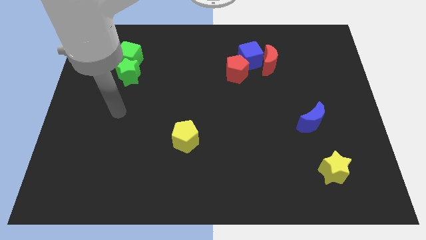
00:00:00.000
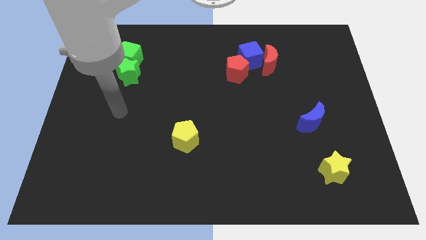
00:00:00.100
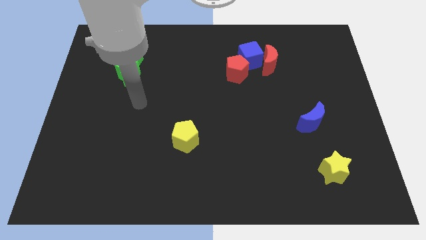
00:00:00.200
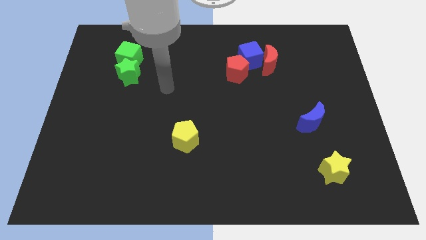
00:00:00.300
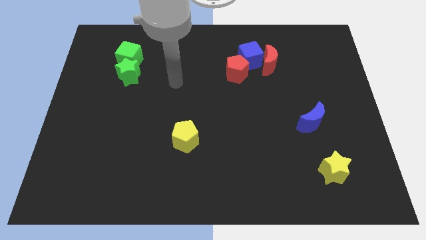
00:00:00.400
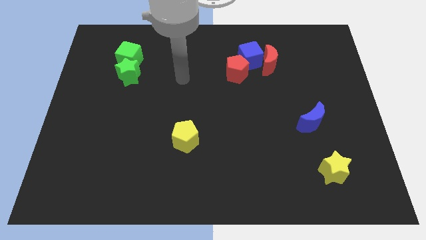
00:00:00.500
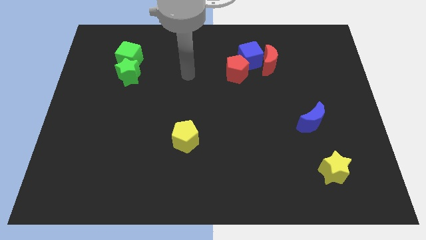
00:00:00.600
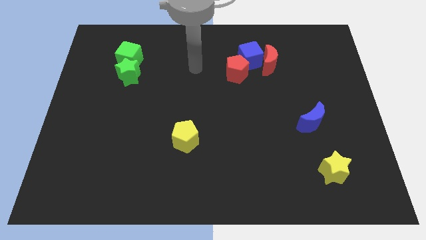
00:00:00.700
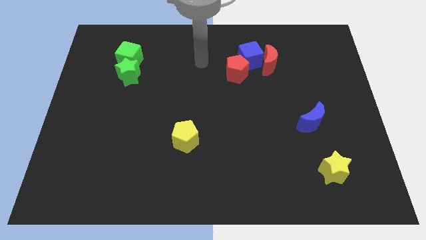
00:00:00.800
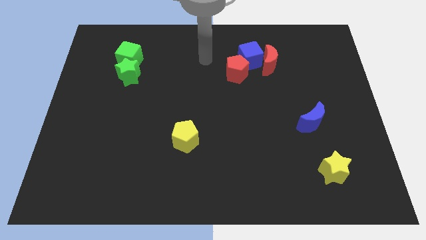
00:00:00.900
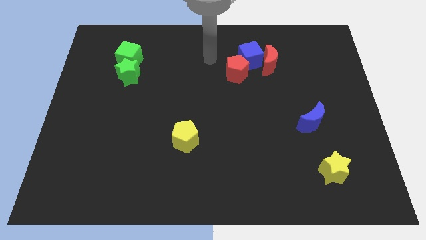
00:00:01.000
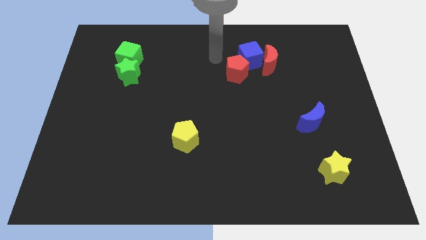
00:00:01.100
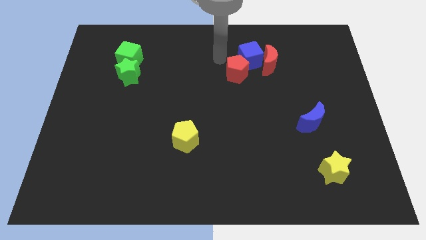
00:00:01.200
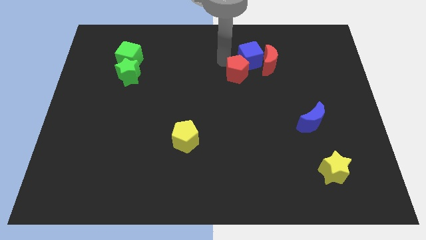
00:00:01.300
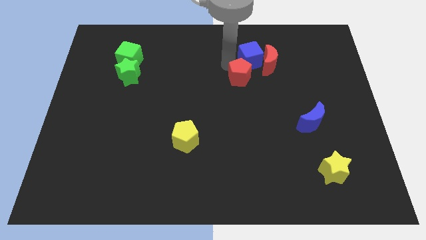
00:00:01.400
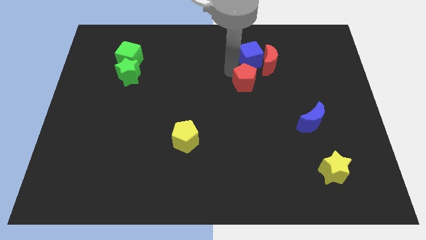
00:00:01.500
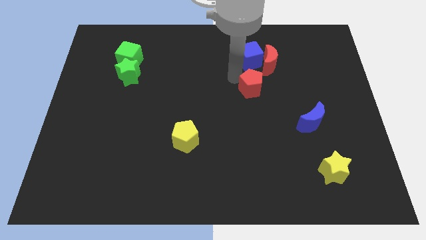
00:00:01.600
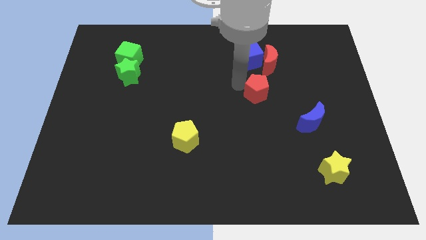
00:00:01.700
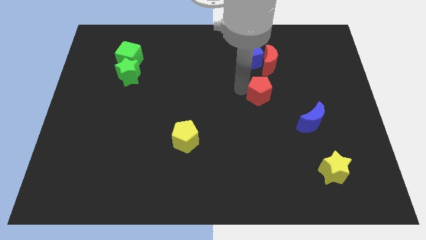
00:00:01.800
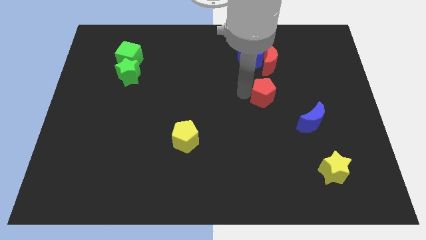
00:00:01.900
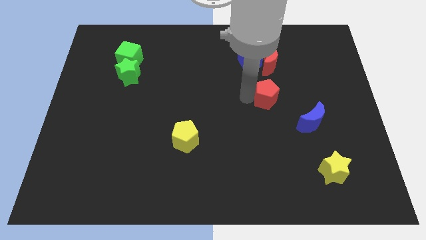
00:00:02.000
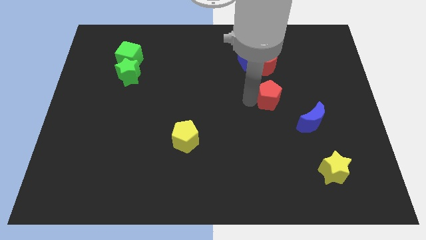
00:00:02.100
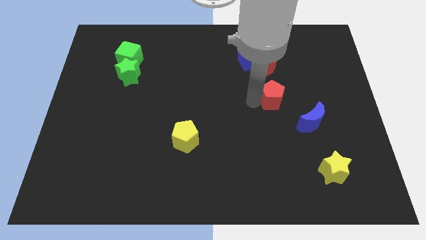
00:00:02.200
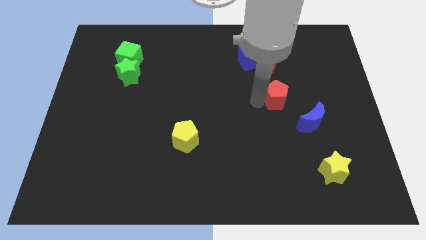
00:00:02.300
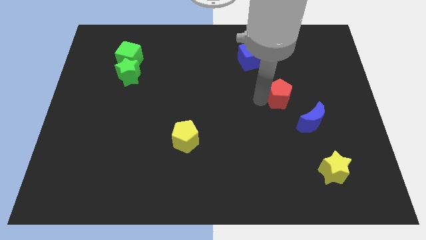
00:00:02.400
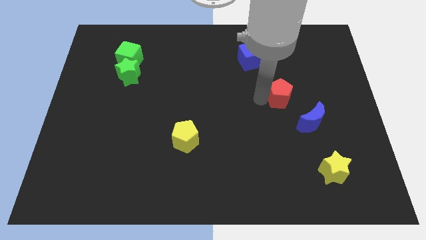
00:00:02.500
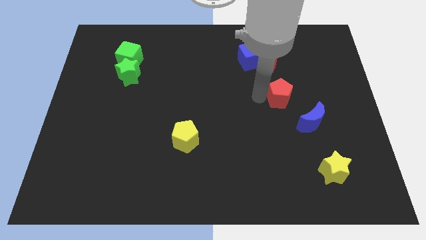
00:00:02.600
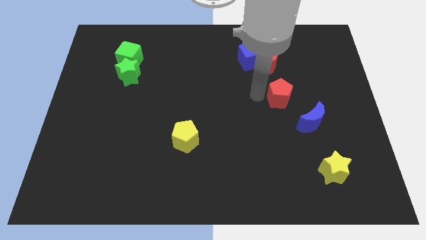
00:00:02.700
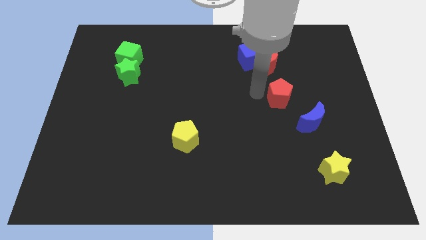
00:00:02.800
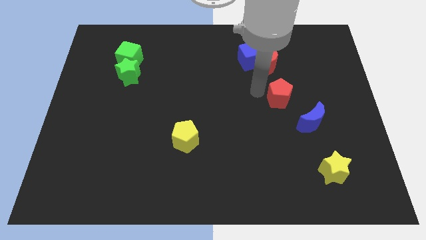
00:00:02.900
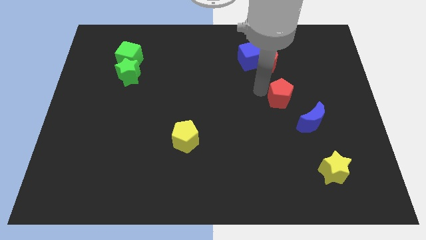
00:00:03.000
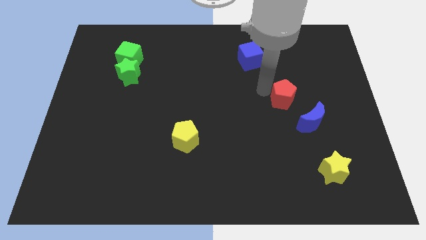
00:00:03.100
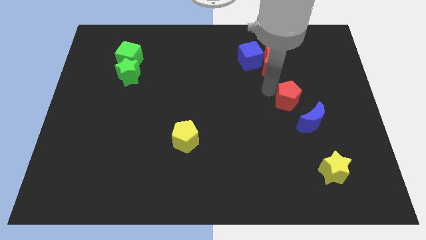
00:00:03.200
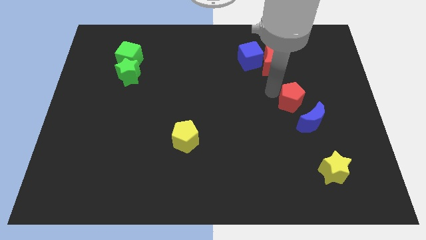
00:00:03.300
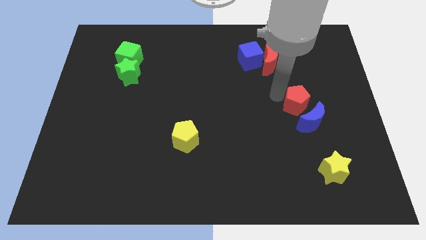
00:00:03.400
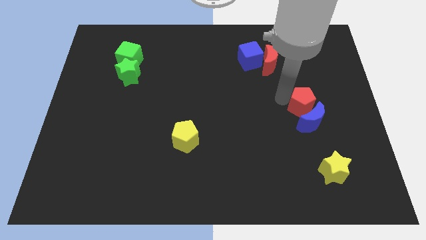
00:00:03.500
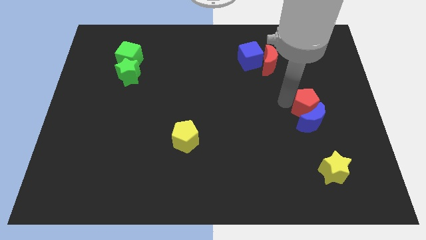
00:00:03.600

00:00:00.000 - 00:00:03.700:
push the red pentagon to the blue moon

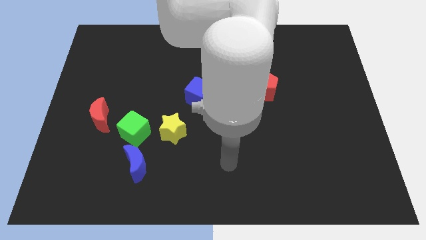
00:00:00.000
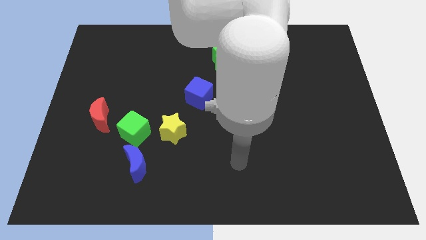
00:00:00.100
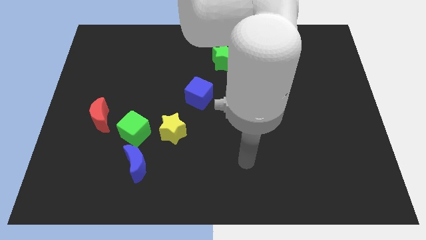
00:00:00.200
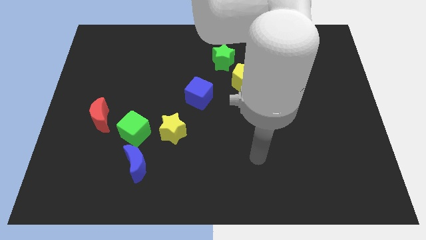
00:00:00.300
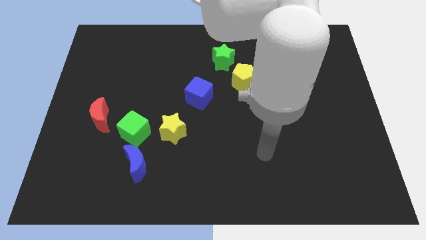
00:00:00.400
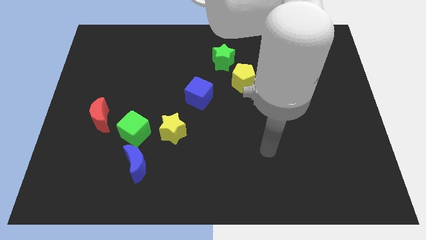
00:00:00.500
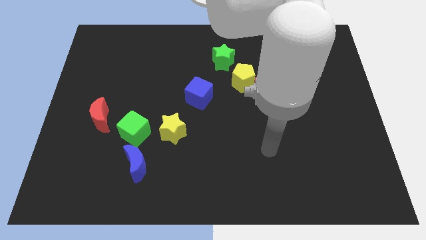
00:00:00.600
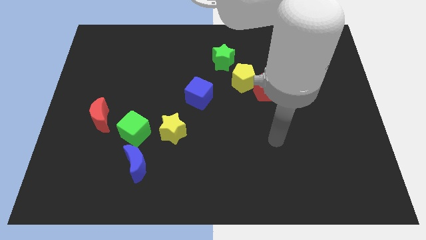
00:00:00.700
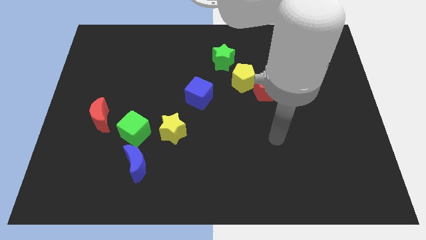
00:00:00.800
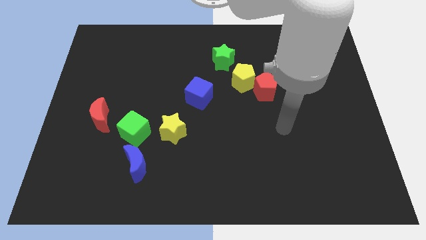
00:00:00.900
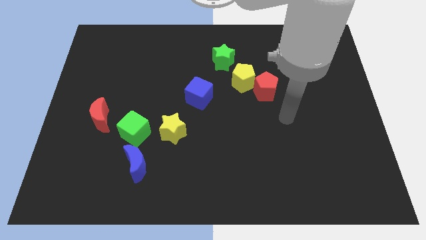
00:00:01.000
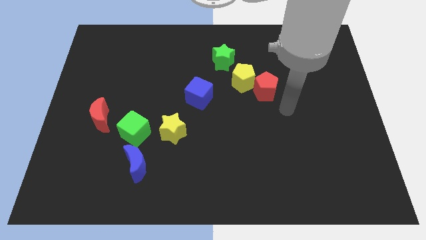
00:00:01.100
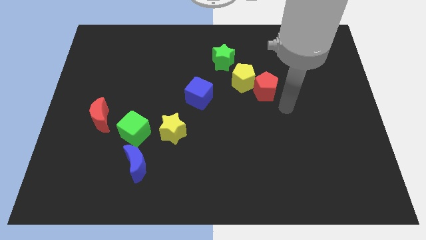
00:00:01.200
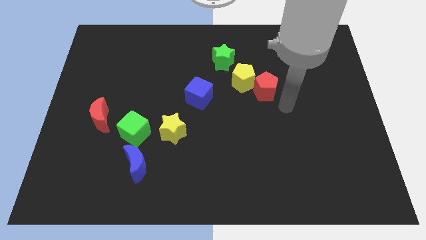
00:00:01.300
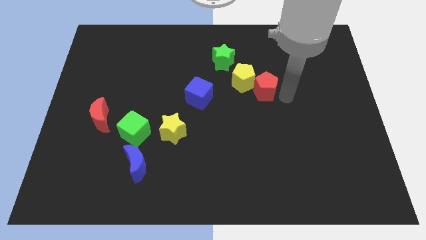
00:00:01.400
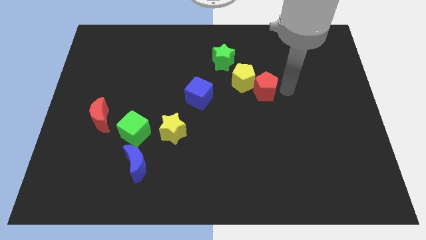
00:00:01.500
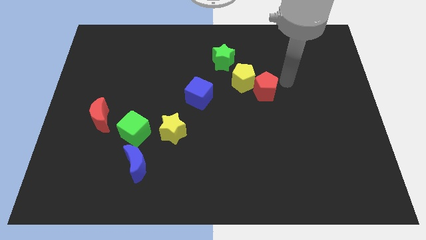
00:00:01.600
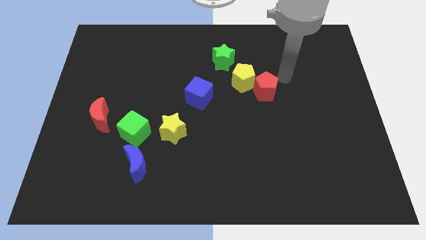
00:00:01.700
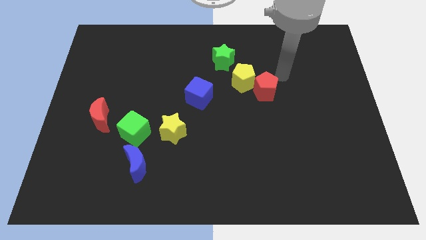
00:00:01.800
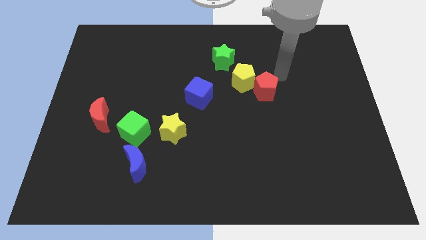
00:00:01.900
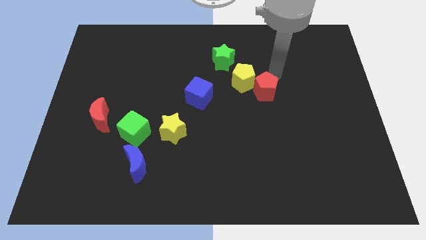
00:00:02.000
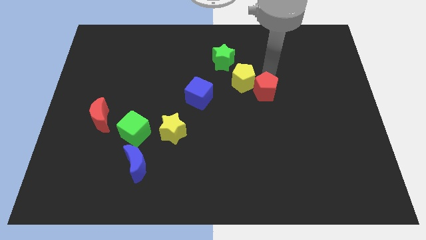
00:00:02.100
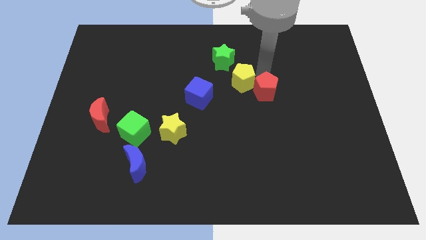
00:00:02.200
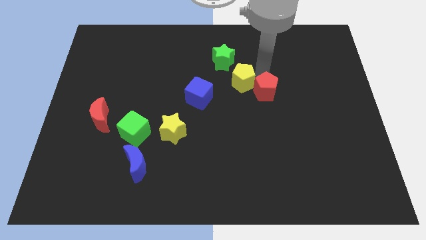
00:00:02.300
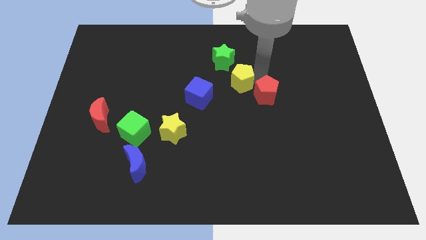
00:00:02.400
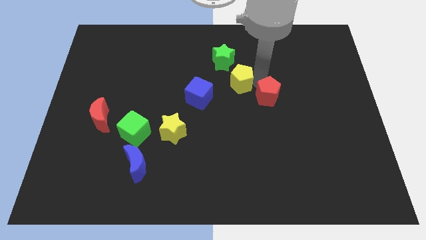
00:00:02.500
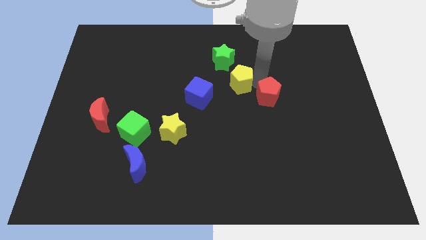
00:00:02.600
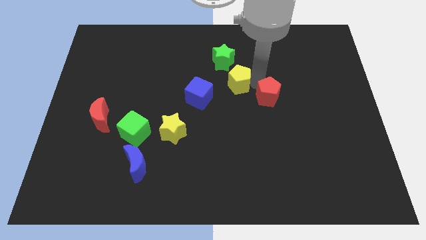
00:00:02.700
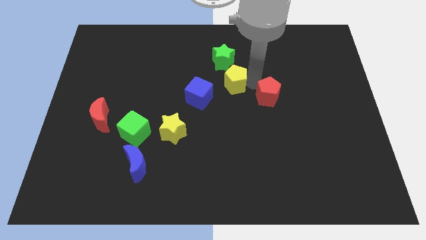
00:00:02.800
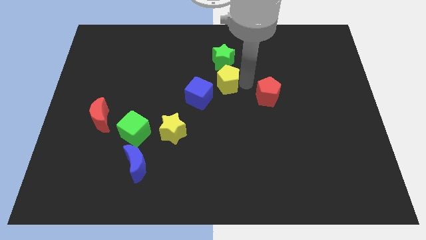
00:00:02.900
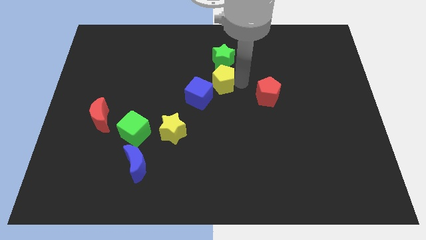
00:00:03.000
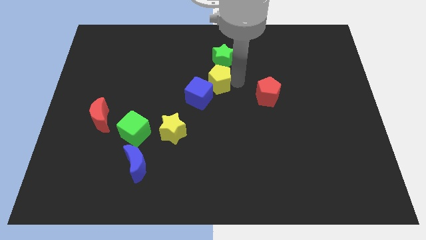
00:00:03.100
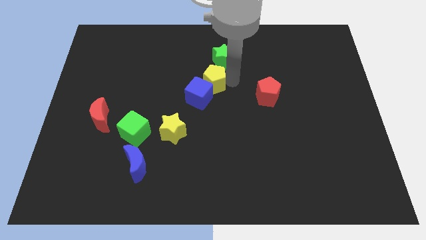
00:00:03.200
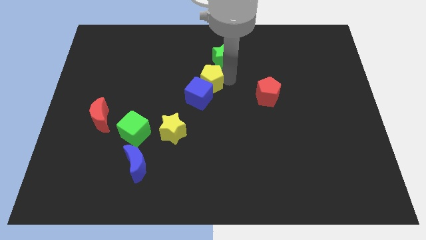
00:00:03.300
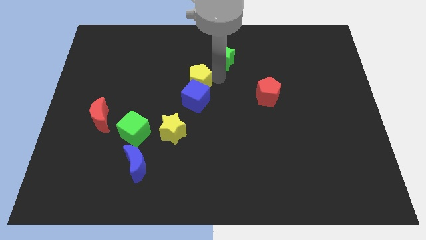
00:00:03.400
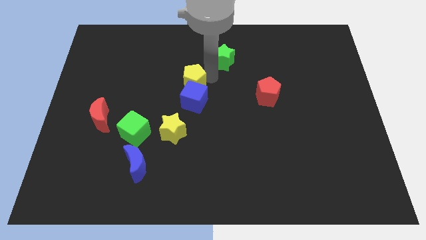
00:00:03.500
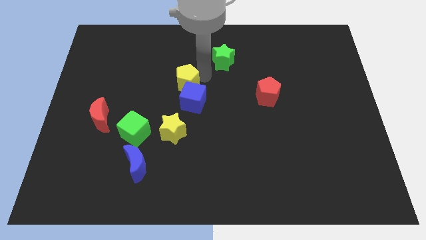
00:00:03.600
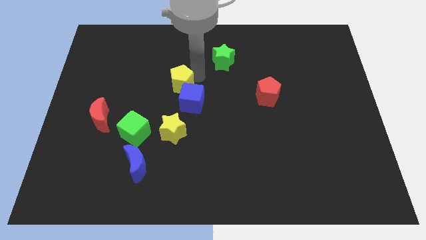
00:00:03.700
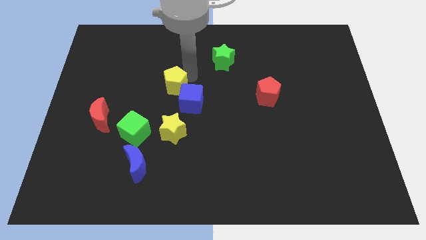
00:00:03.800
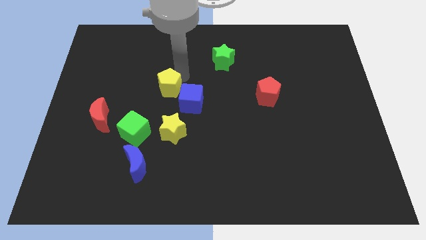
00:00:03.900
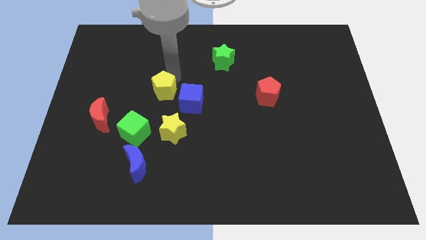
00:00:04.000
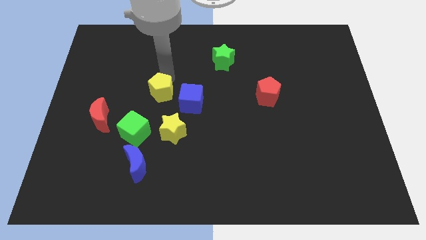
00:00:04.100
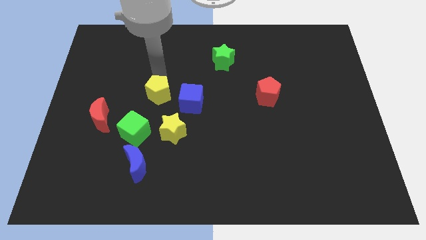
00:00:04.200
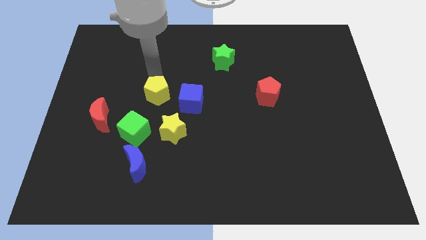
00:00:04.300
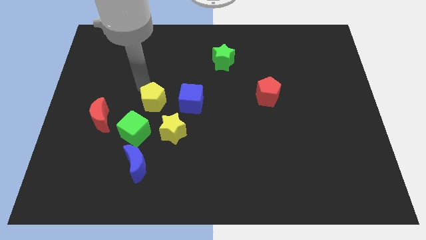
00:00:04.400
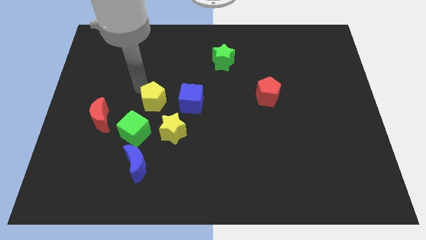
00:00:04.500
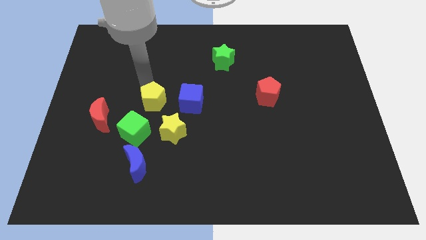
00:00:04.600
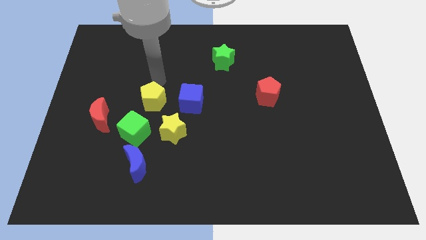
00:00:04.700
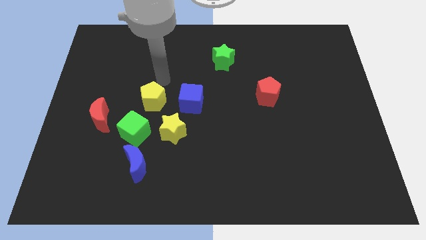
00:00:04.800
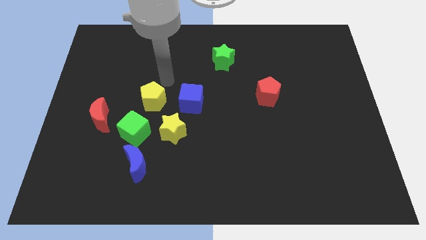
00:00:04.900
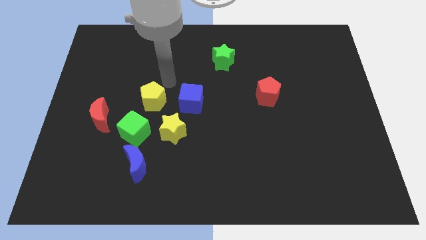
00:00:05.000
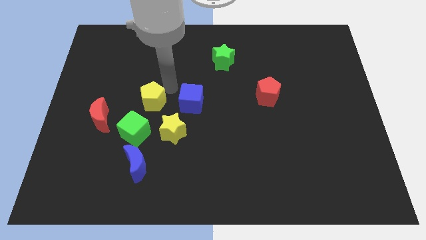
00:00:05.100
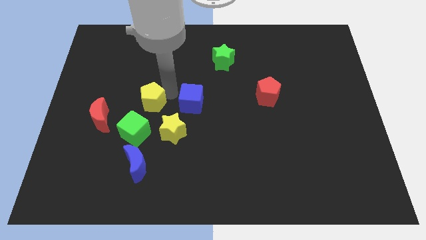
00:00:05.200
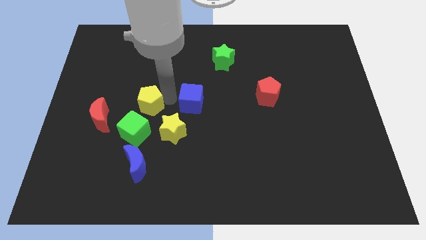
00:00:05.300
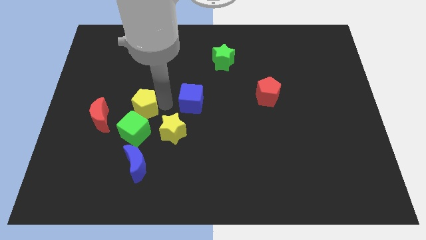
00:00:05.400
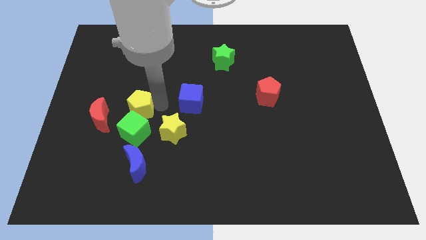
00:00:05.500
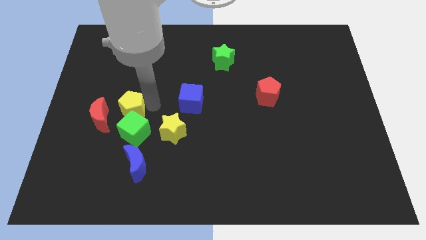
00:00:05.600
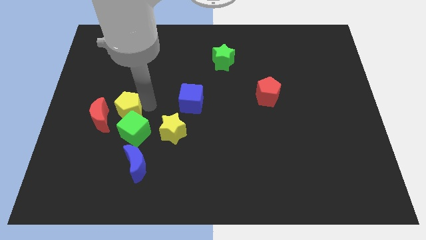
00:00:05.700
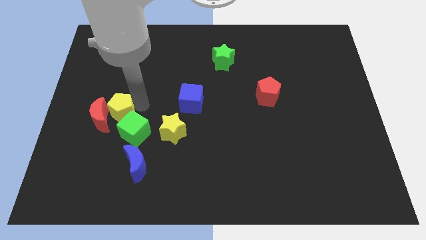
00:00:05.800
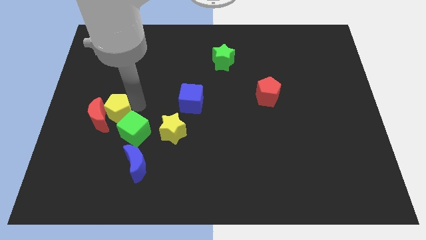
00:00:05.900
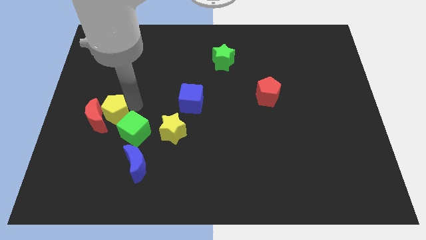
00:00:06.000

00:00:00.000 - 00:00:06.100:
slide the yellow pentagon towards the red moon
